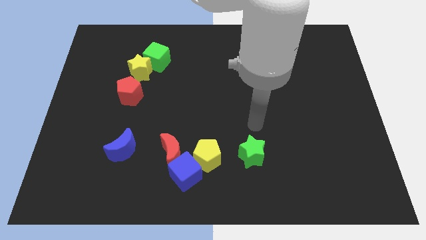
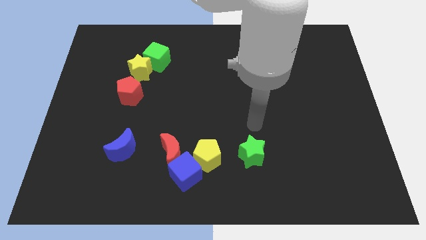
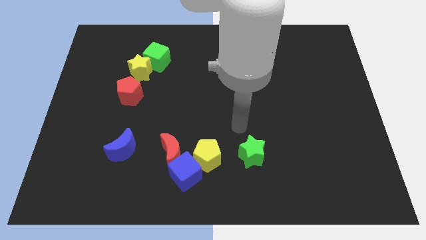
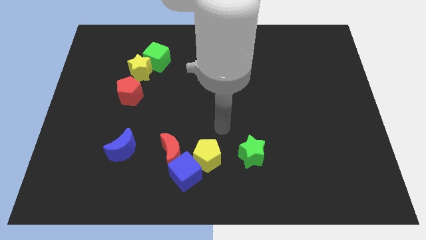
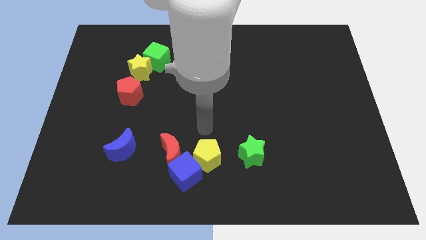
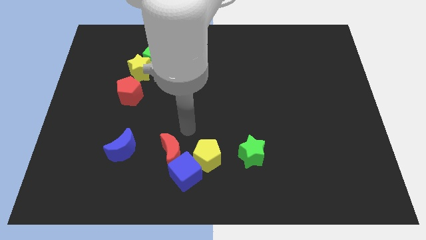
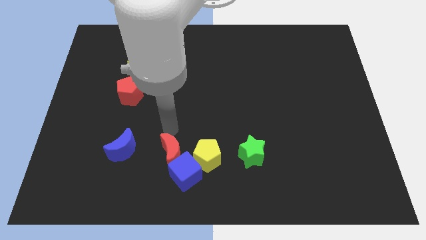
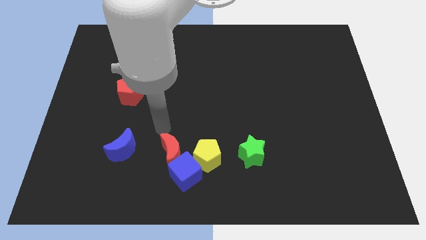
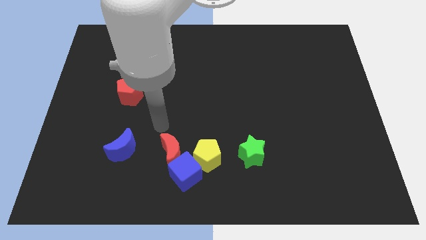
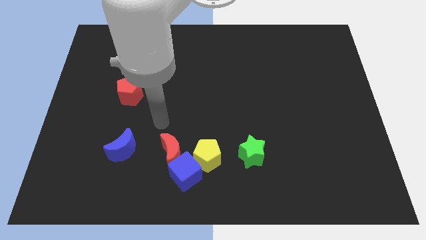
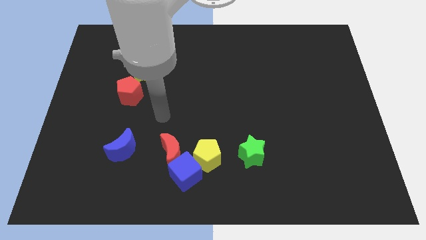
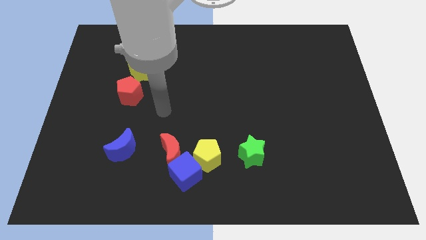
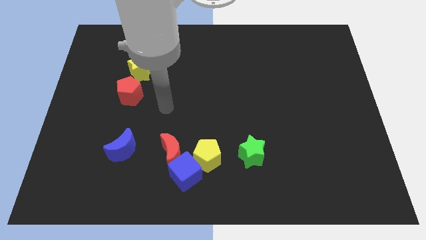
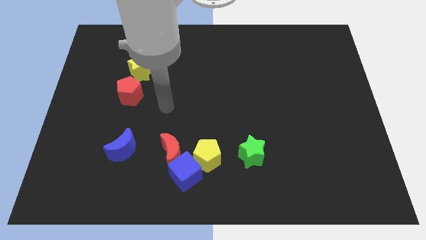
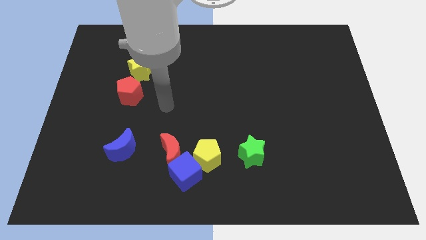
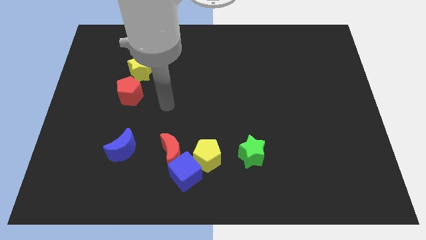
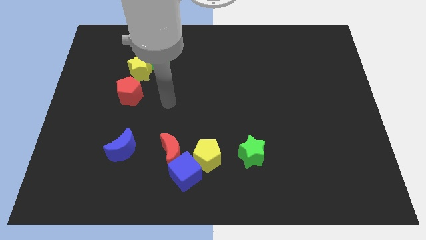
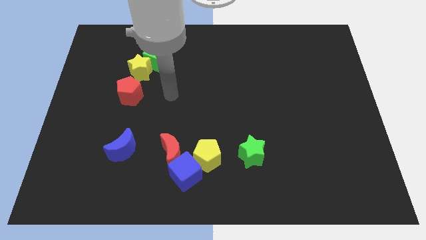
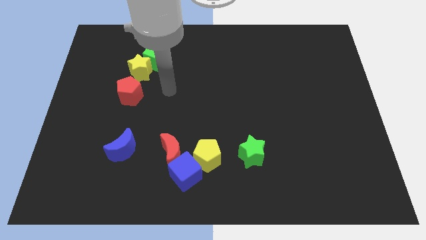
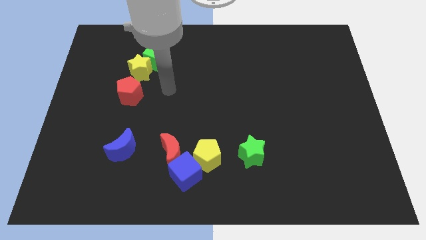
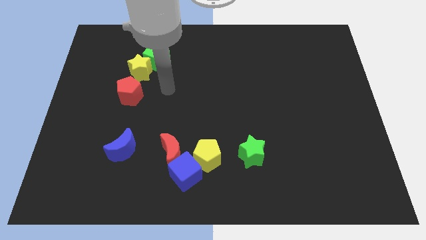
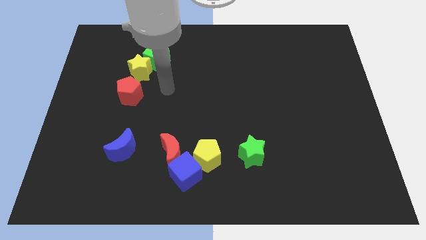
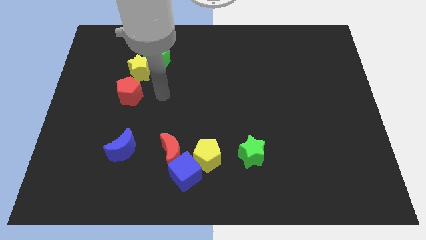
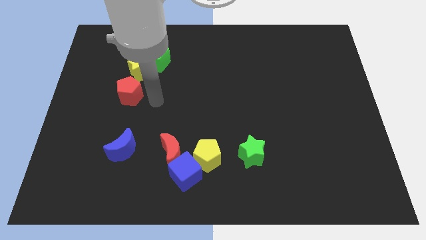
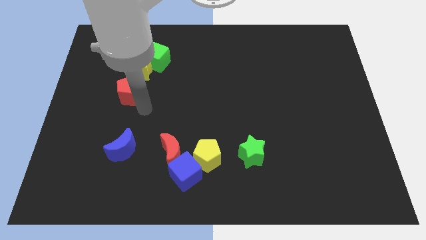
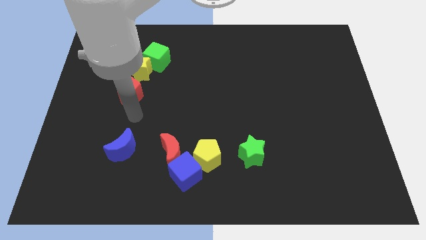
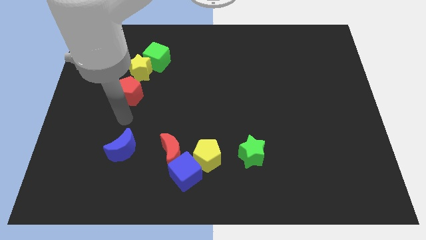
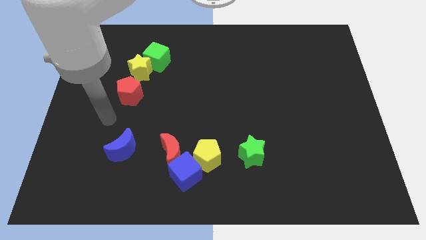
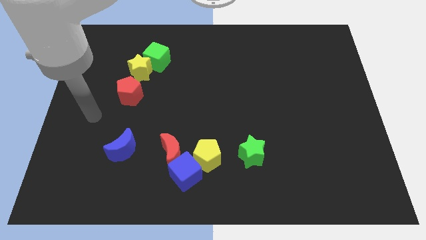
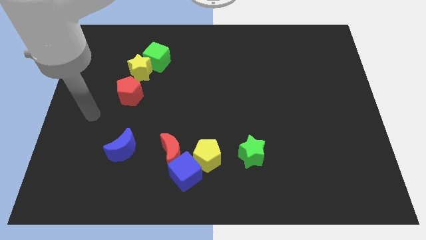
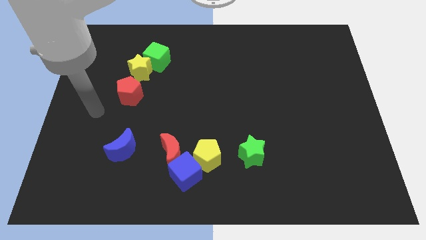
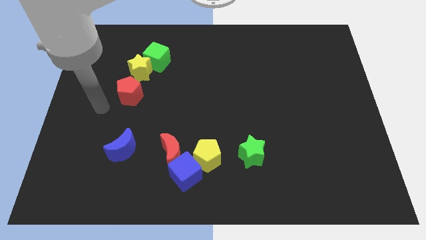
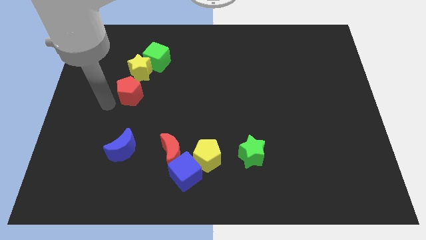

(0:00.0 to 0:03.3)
place your arm left to the red pentagon

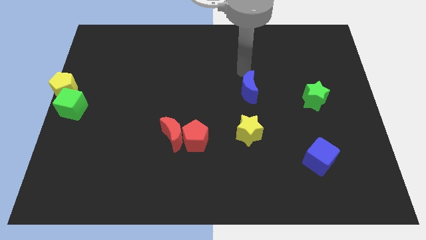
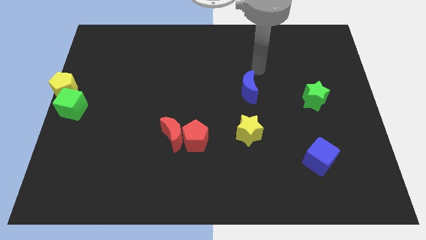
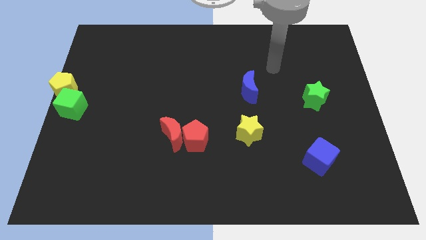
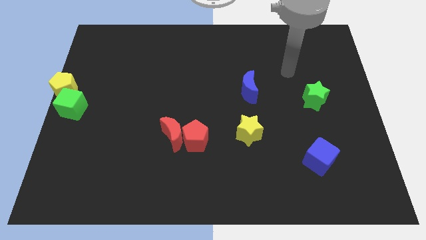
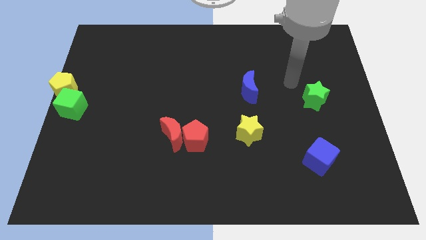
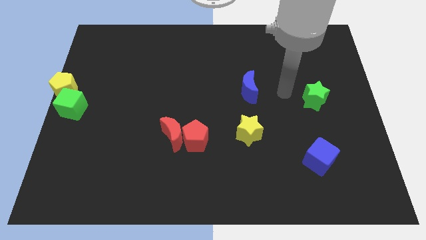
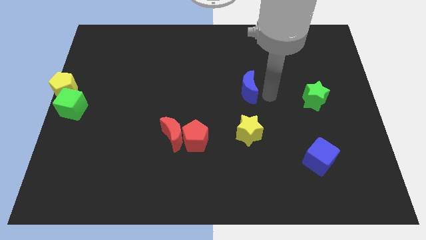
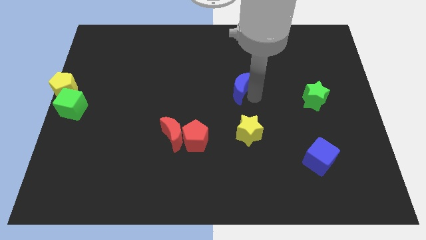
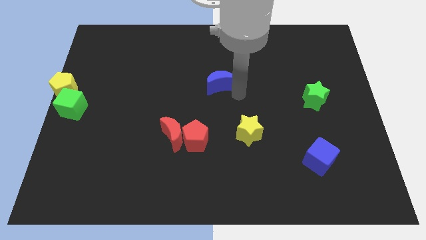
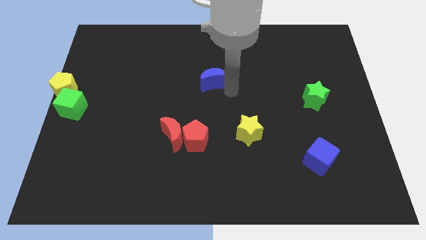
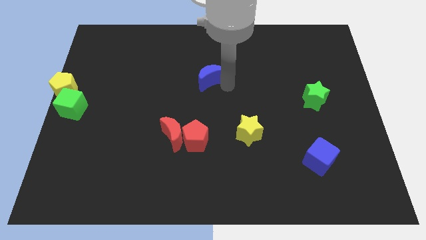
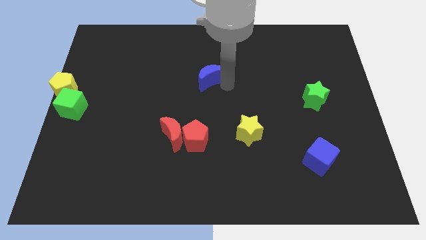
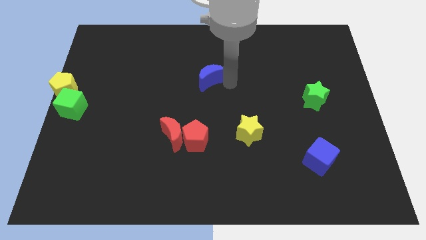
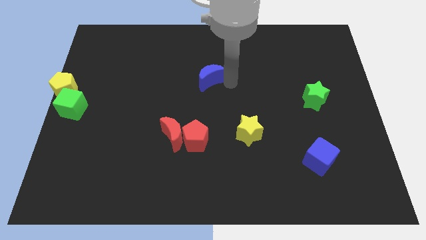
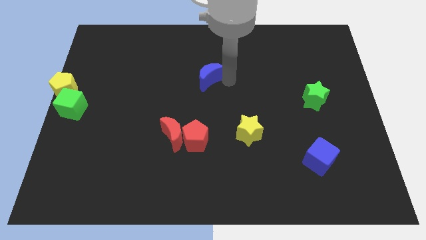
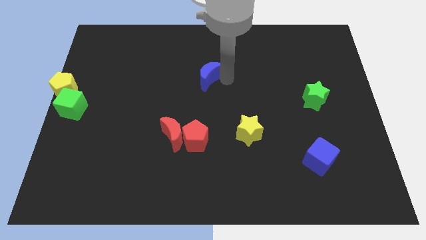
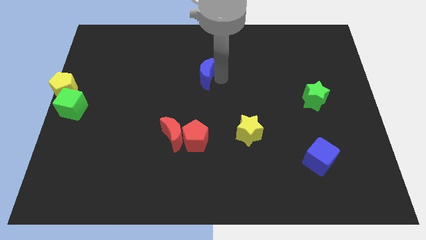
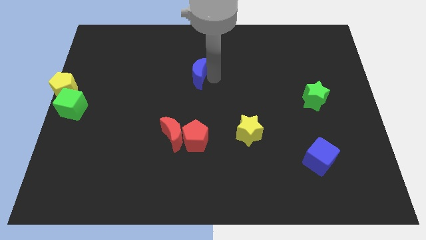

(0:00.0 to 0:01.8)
push the blue crescent to the top of the red pentagon

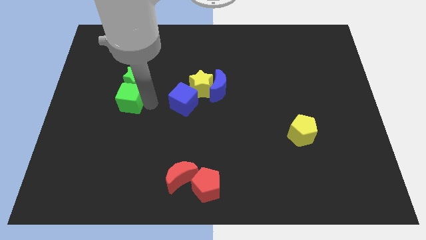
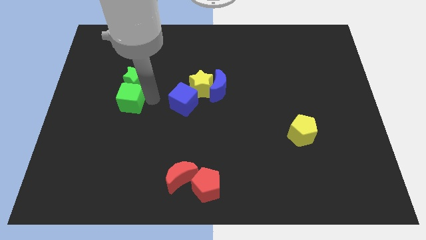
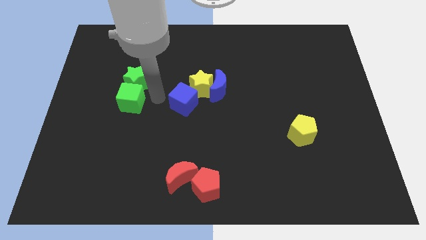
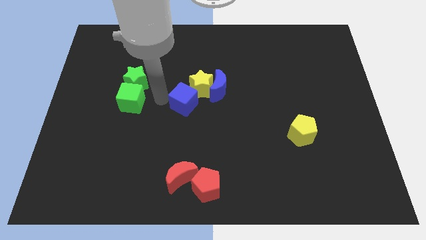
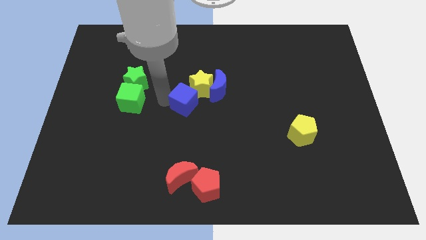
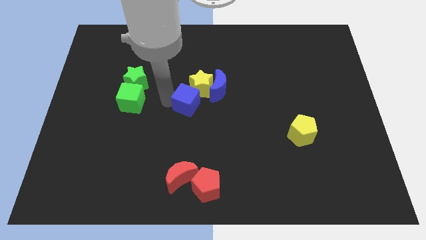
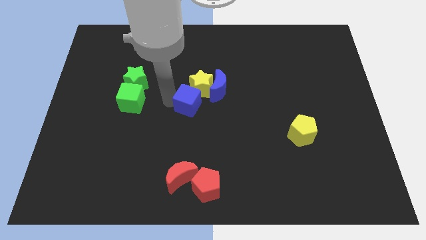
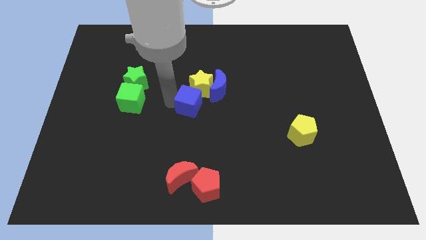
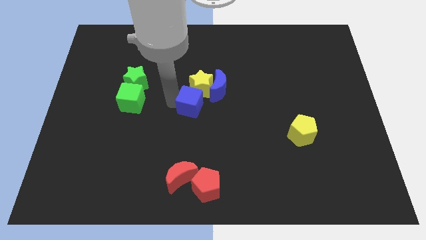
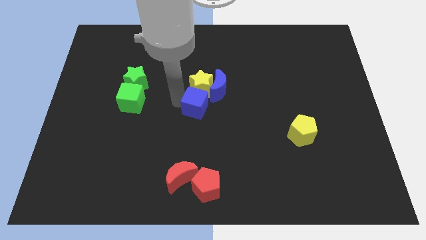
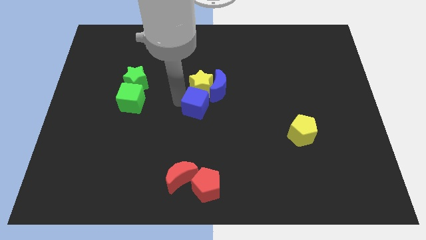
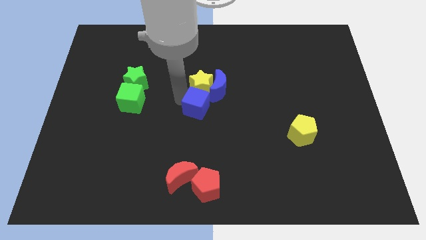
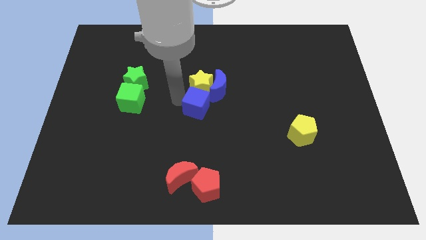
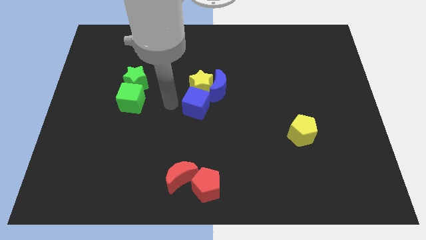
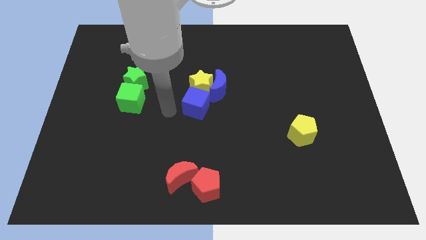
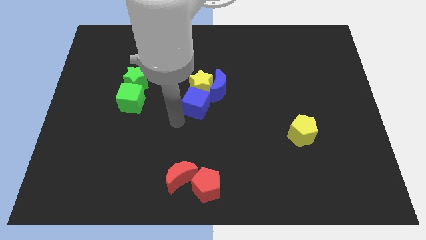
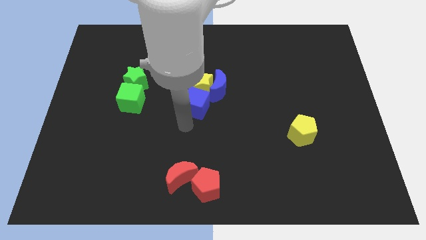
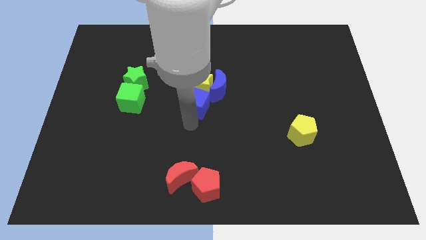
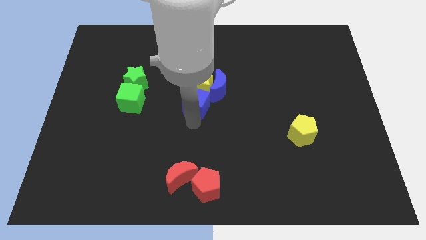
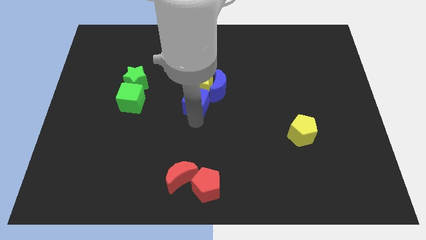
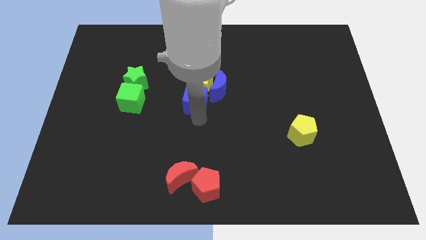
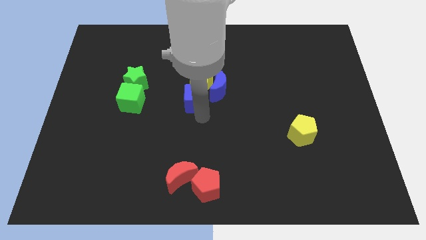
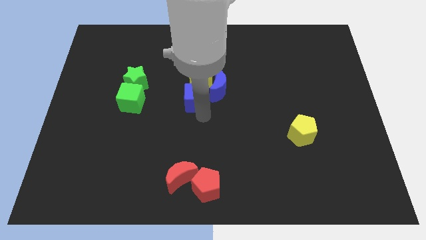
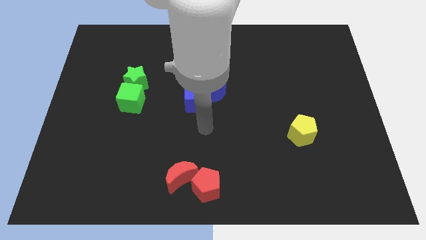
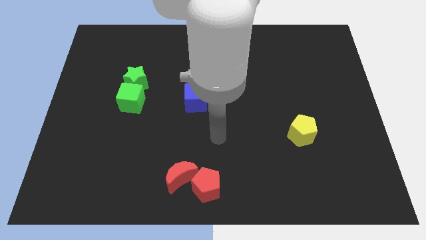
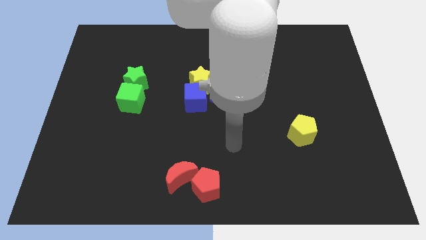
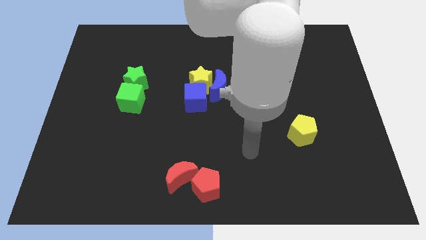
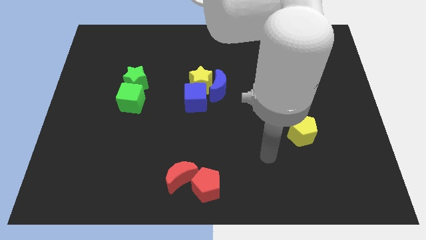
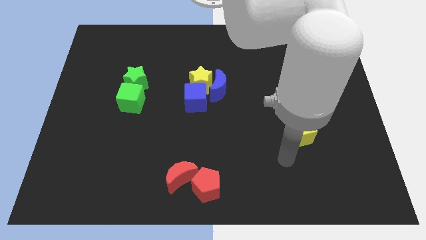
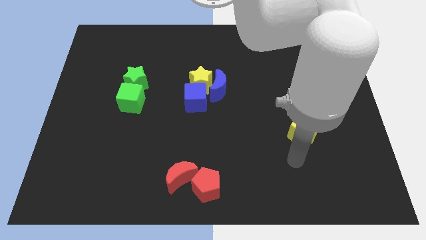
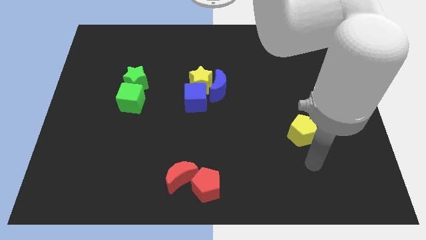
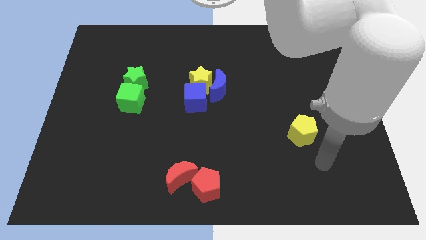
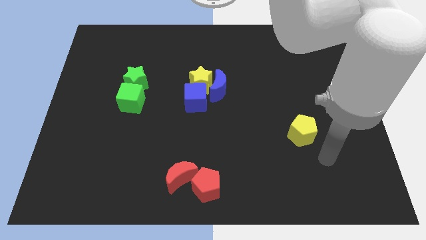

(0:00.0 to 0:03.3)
push the blue cube into the yellow star

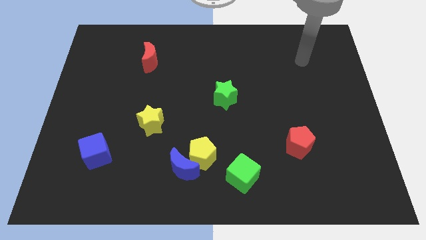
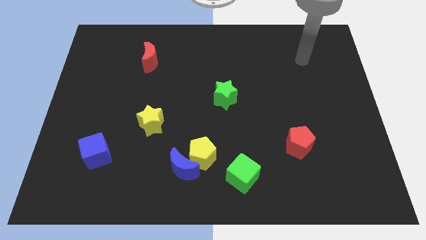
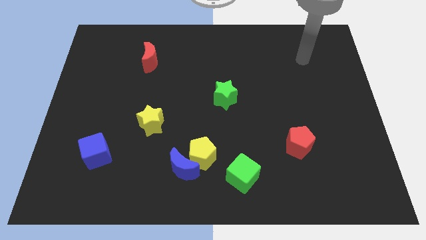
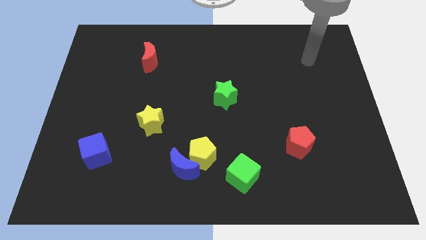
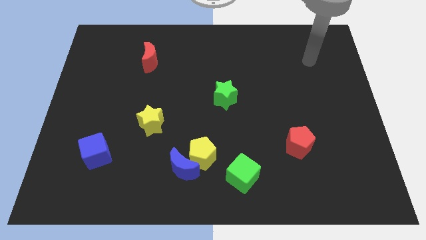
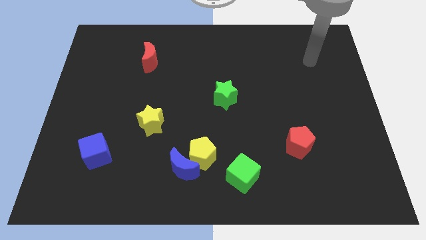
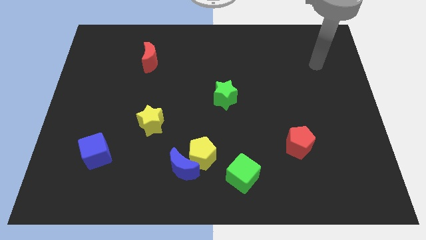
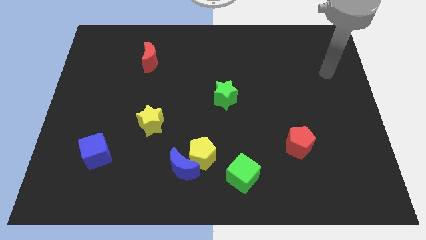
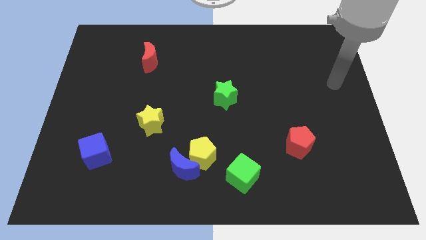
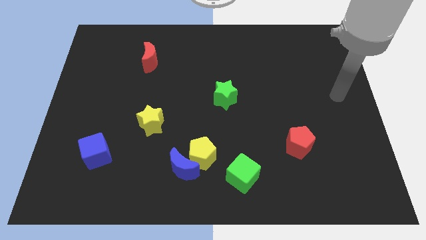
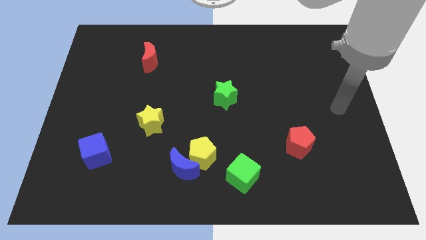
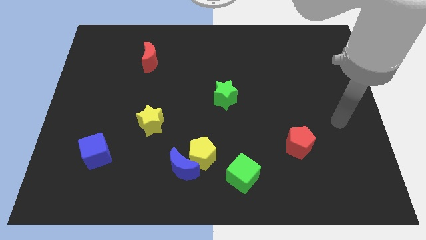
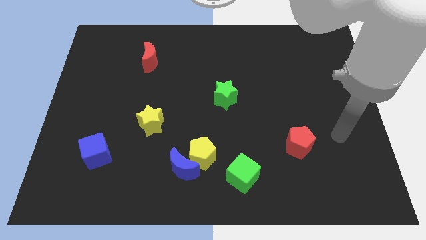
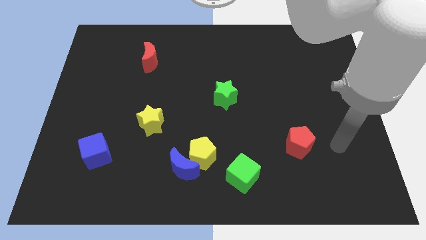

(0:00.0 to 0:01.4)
point your arm at the right side of the red pentagon
